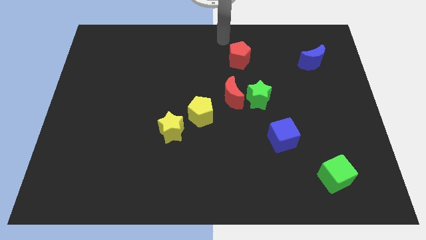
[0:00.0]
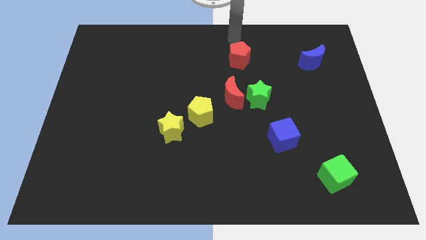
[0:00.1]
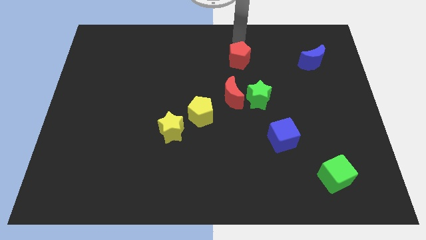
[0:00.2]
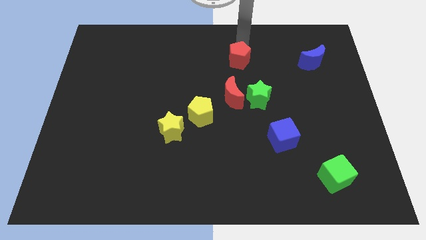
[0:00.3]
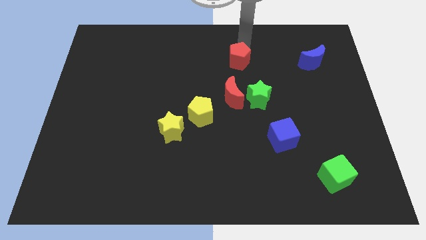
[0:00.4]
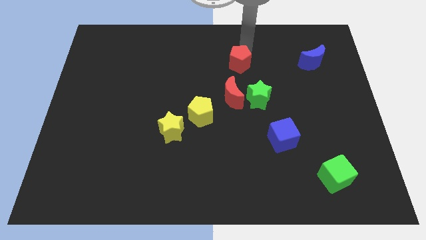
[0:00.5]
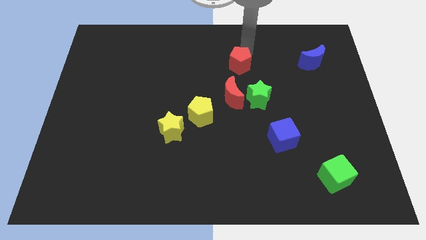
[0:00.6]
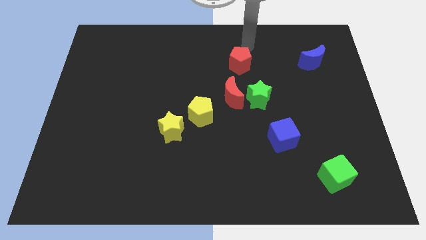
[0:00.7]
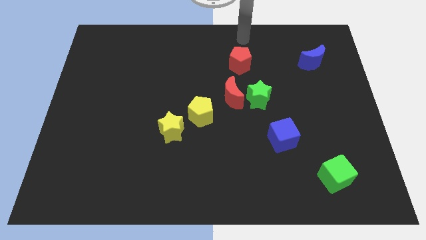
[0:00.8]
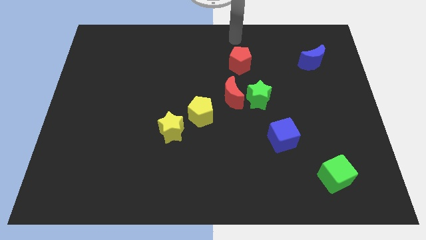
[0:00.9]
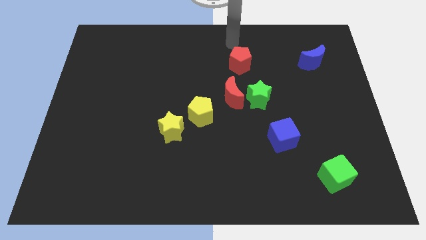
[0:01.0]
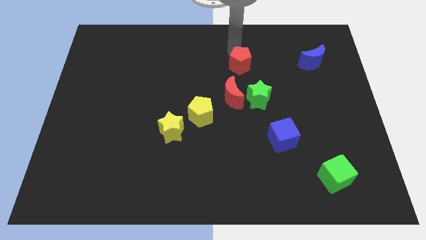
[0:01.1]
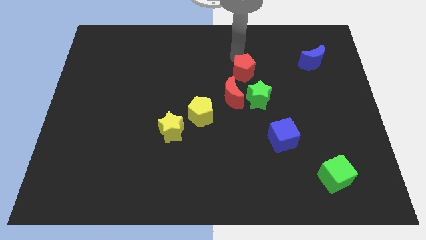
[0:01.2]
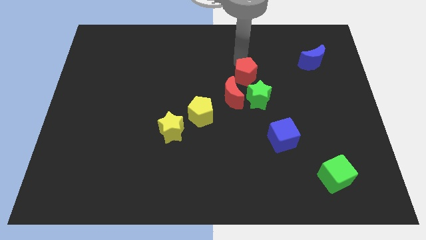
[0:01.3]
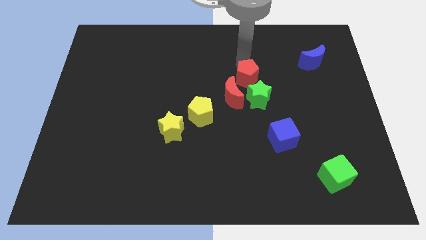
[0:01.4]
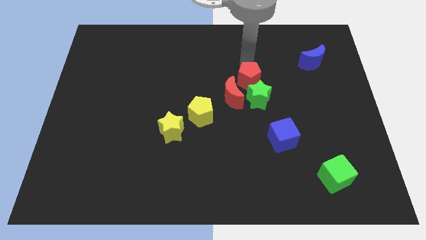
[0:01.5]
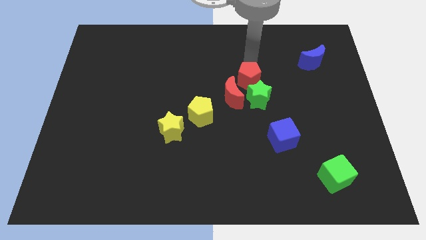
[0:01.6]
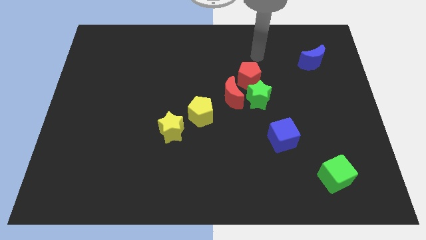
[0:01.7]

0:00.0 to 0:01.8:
push the red pentagon to the top left of the green star

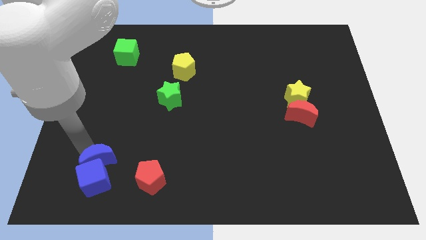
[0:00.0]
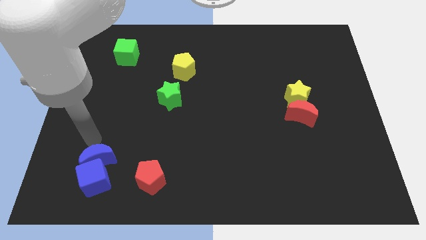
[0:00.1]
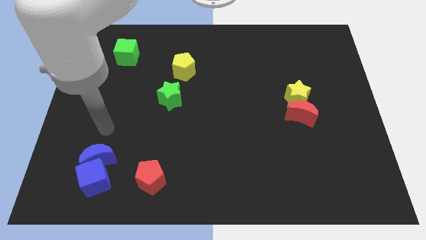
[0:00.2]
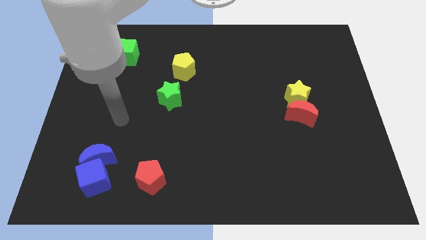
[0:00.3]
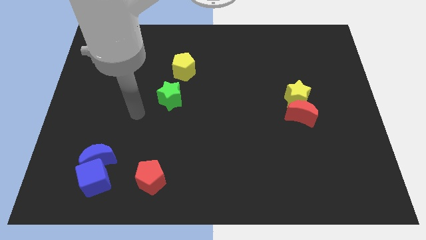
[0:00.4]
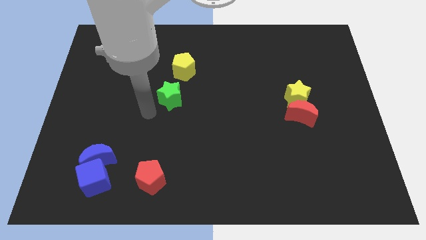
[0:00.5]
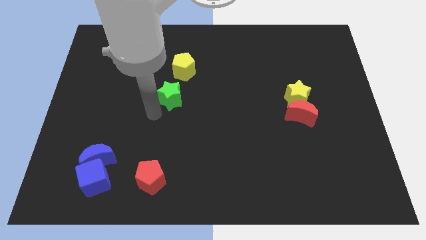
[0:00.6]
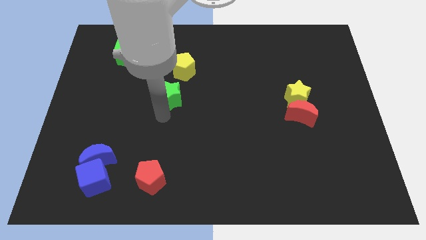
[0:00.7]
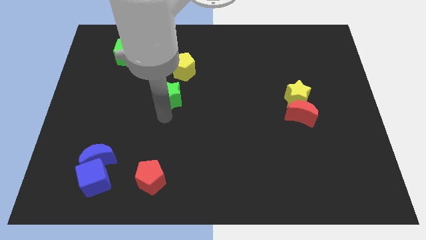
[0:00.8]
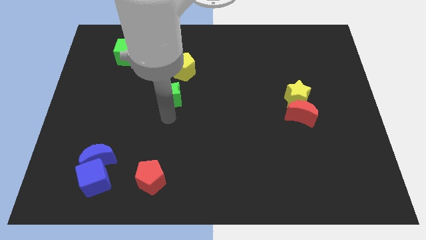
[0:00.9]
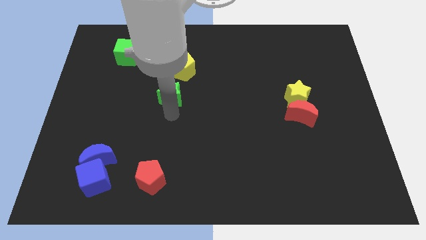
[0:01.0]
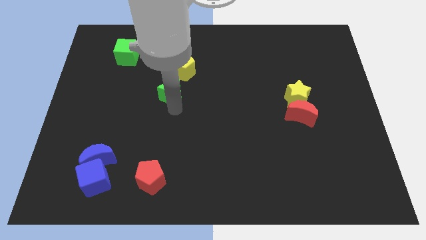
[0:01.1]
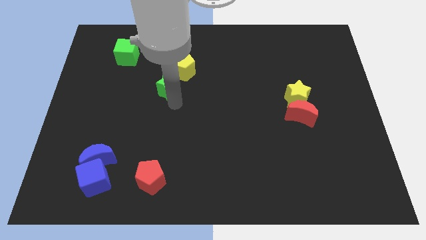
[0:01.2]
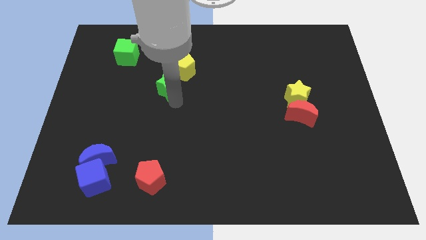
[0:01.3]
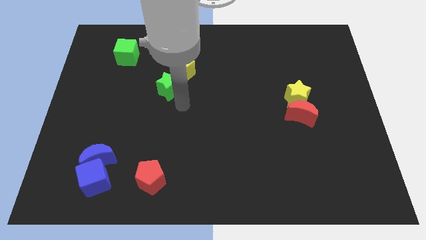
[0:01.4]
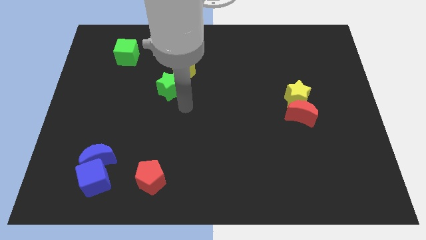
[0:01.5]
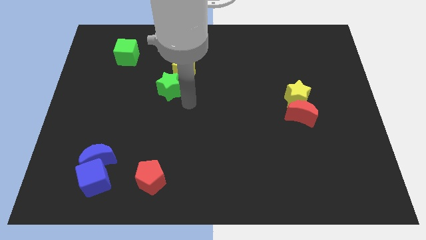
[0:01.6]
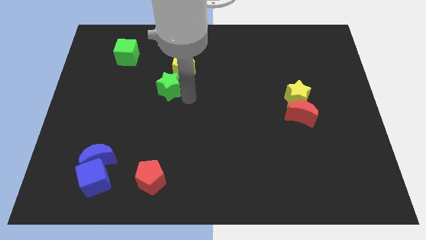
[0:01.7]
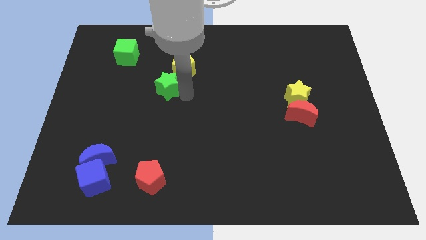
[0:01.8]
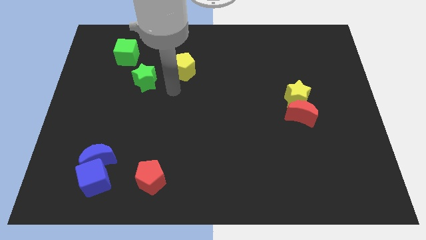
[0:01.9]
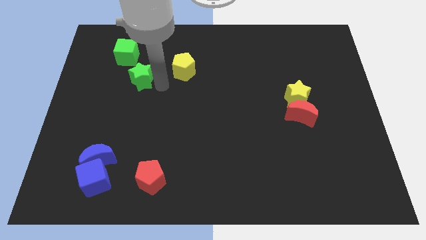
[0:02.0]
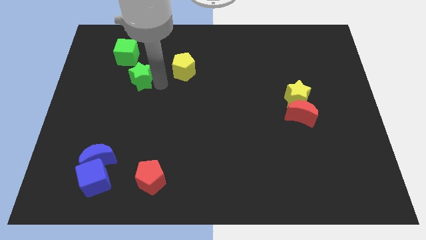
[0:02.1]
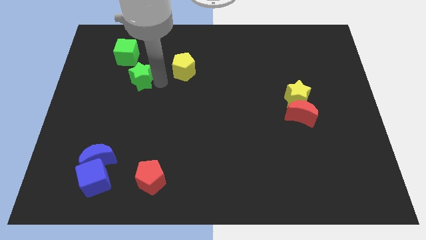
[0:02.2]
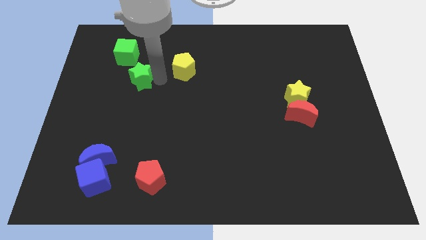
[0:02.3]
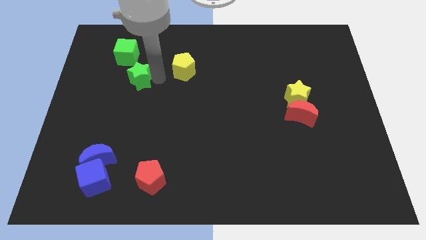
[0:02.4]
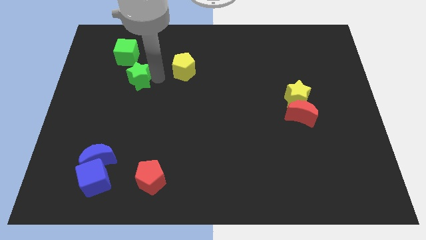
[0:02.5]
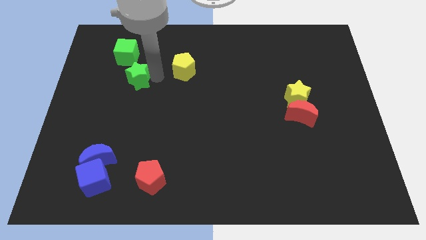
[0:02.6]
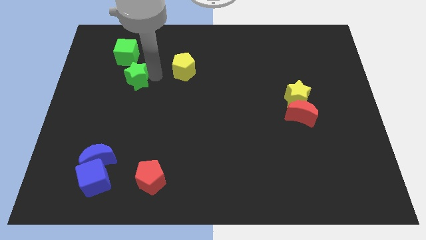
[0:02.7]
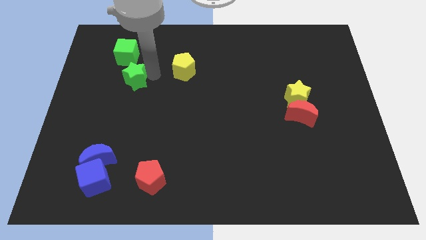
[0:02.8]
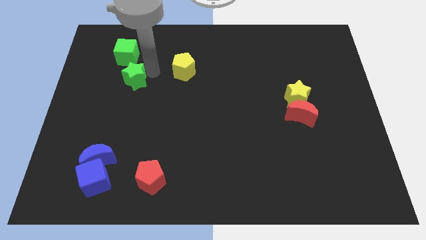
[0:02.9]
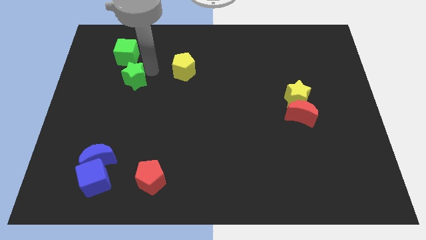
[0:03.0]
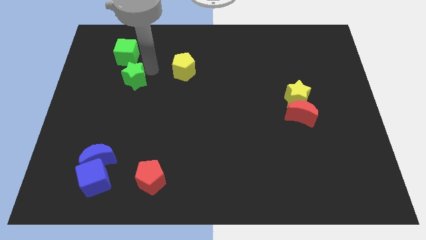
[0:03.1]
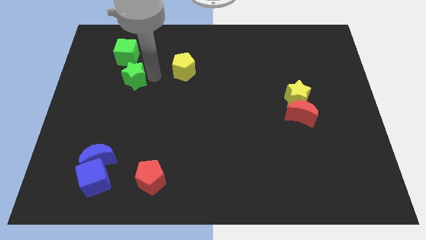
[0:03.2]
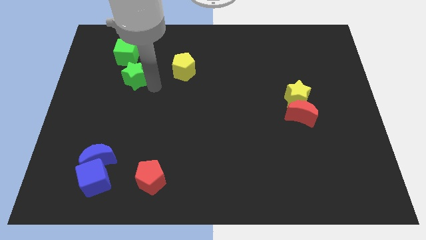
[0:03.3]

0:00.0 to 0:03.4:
move the green star diagonally bottom right to green cube

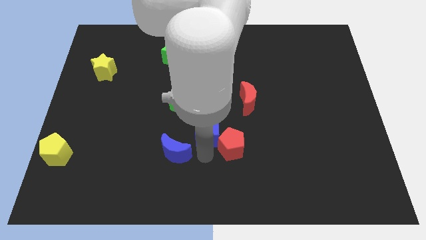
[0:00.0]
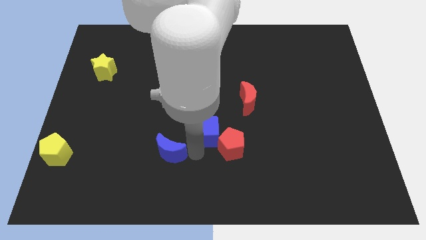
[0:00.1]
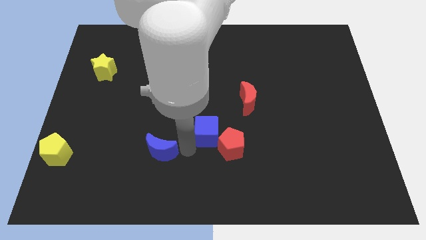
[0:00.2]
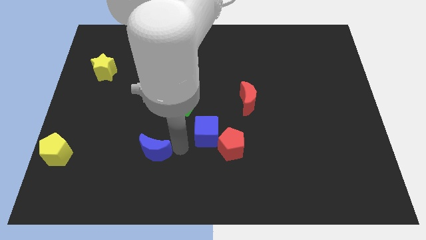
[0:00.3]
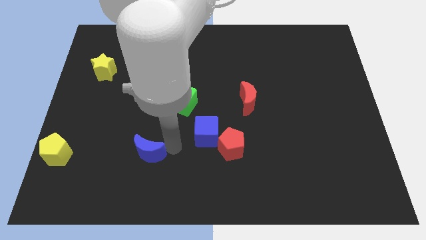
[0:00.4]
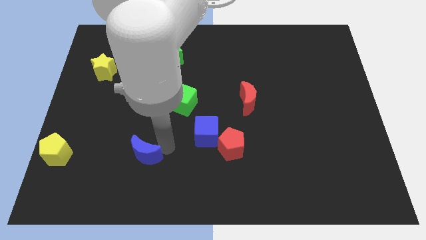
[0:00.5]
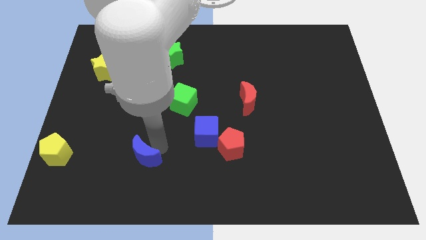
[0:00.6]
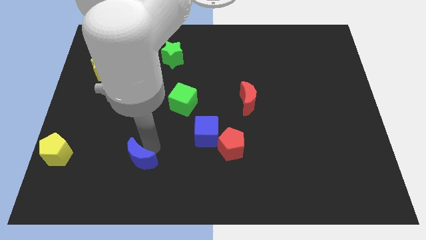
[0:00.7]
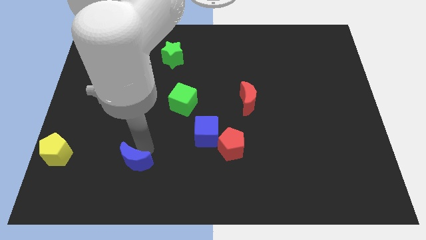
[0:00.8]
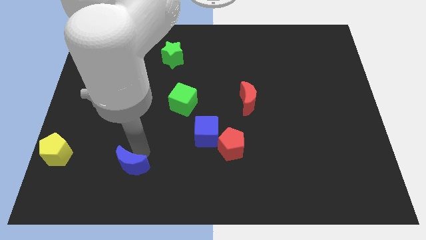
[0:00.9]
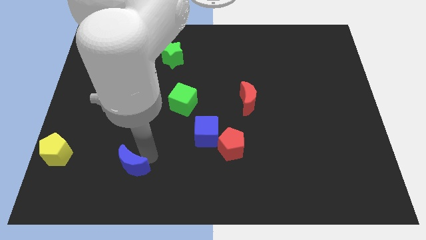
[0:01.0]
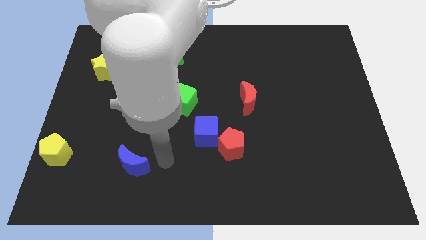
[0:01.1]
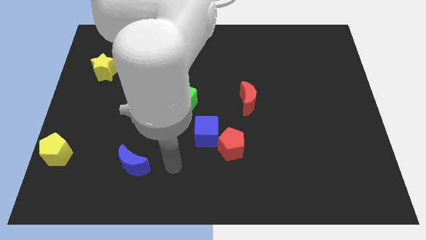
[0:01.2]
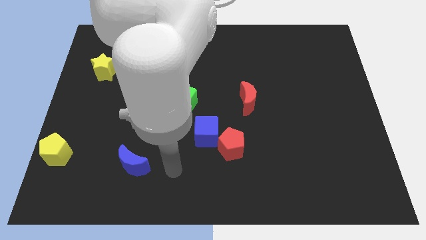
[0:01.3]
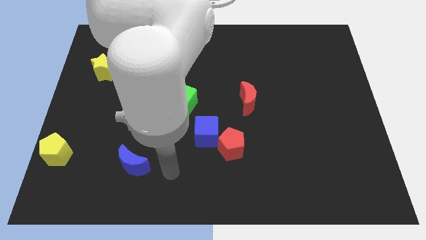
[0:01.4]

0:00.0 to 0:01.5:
push the blue moon towards the yellow pentagon

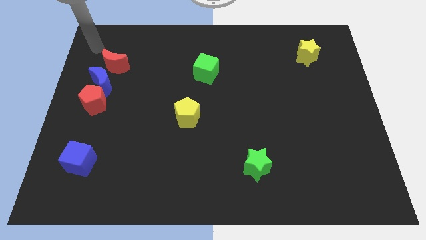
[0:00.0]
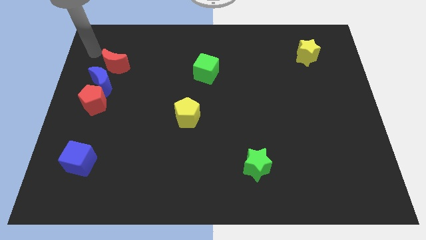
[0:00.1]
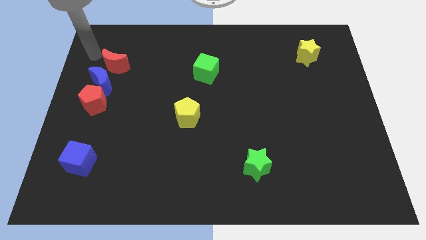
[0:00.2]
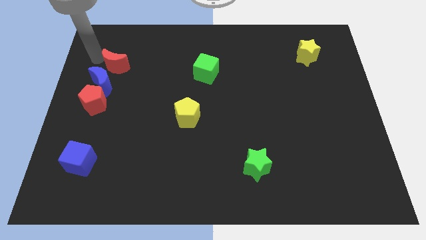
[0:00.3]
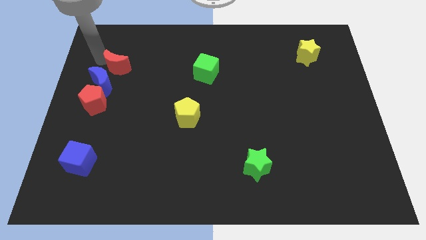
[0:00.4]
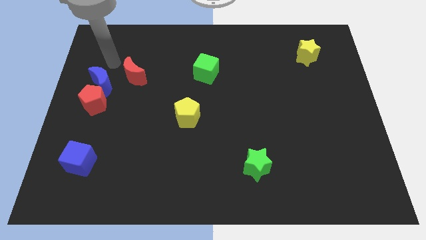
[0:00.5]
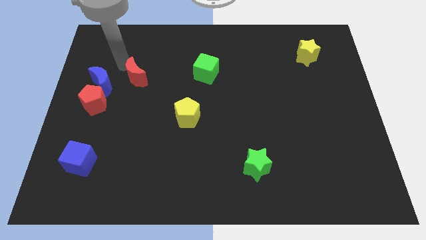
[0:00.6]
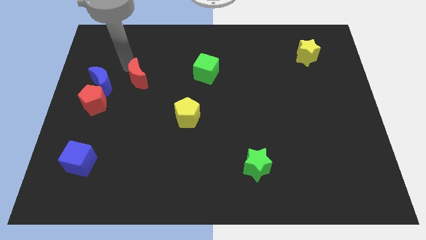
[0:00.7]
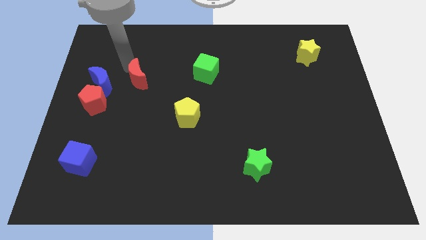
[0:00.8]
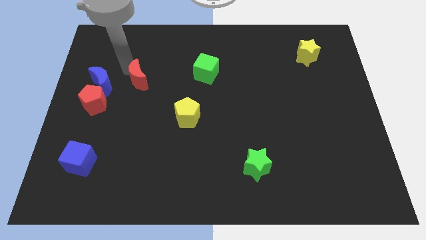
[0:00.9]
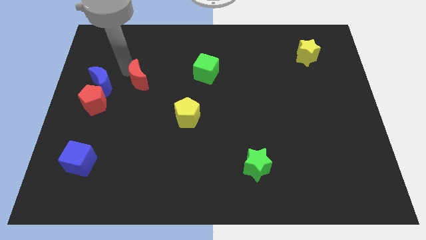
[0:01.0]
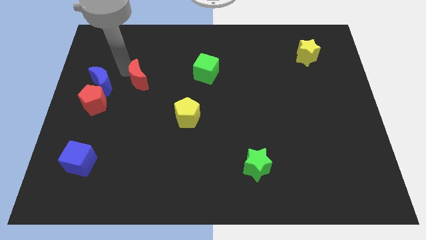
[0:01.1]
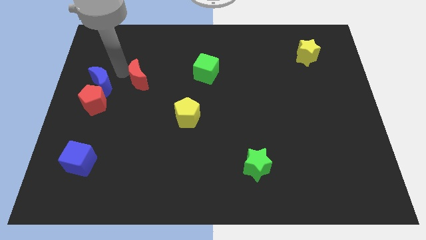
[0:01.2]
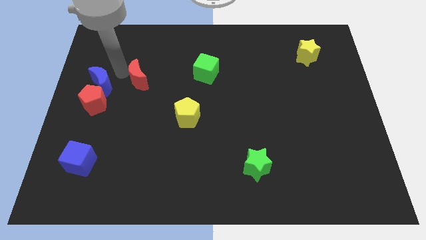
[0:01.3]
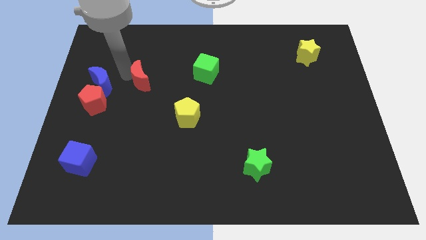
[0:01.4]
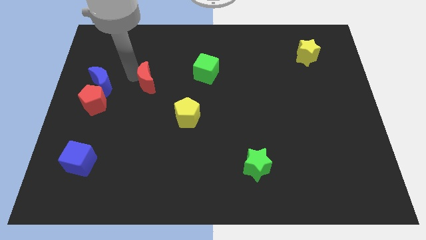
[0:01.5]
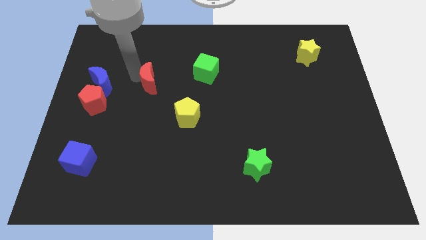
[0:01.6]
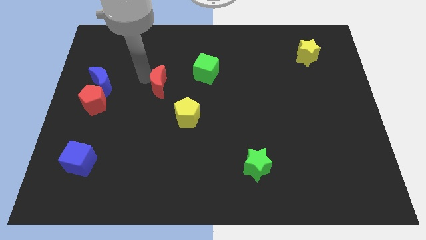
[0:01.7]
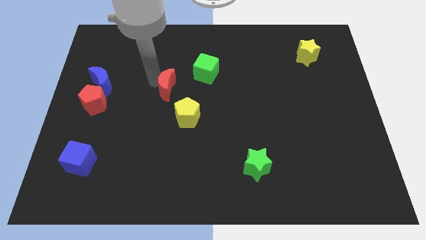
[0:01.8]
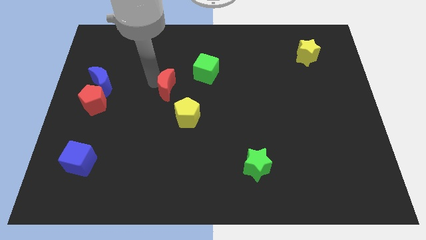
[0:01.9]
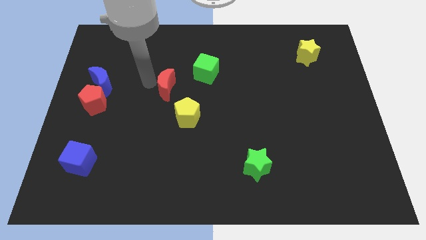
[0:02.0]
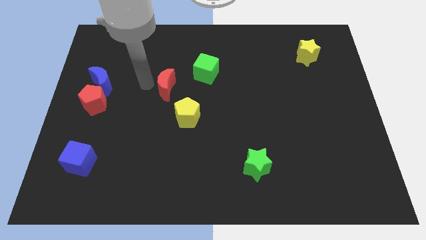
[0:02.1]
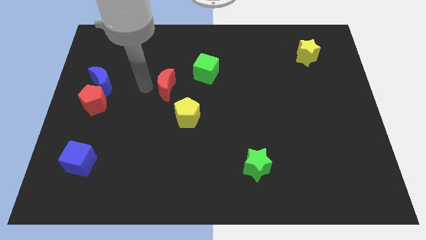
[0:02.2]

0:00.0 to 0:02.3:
move the red moon to the top left side of the yellow pentagon
